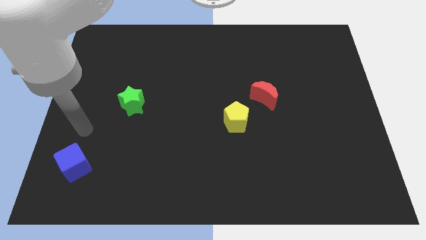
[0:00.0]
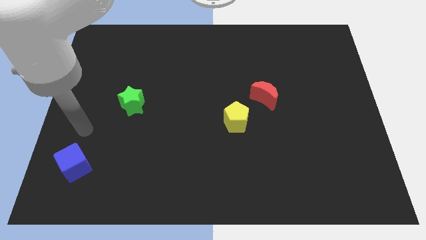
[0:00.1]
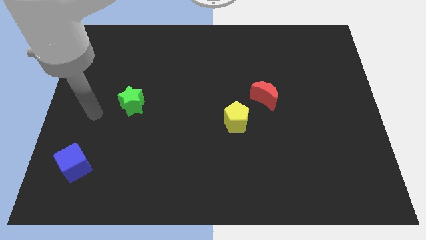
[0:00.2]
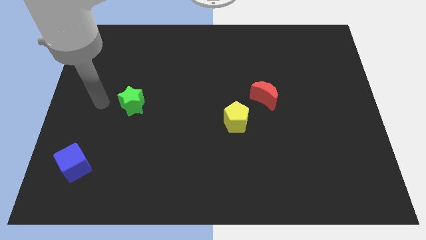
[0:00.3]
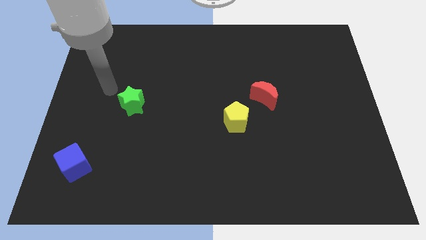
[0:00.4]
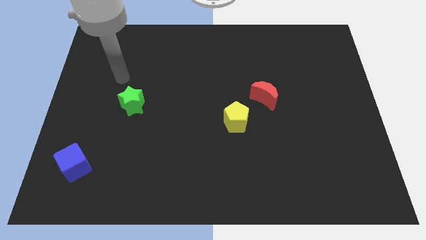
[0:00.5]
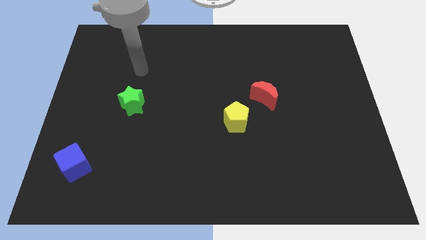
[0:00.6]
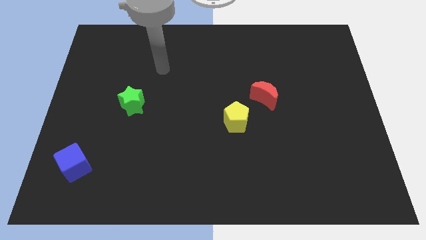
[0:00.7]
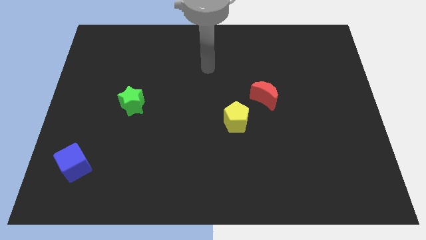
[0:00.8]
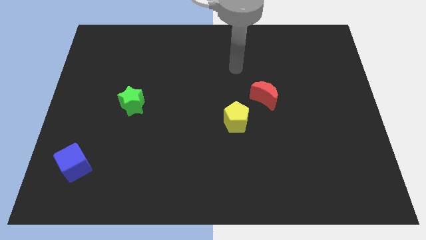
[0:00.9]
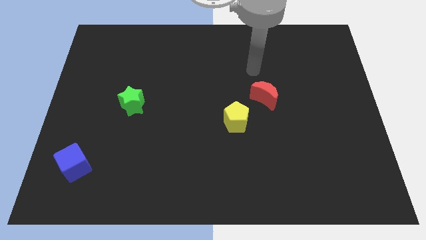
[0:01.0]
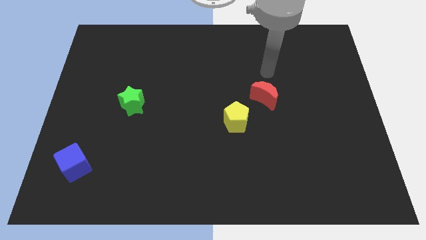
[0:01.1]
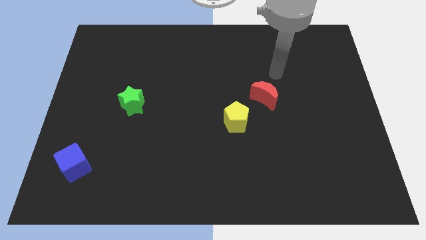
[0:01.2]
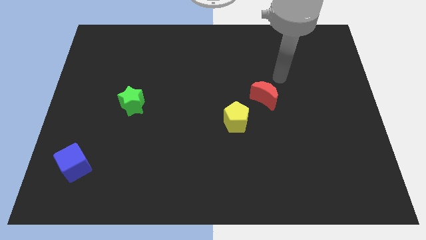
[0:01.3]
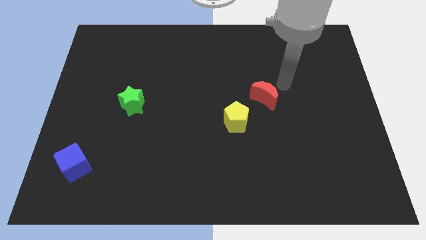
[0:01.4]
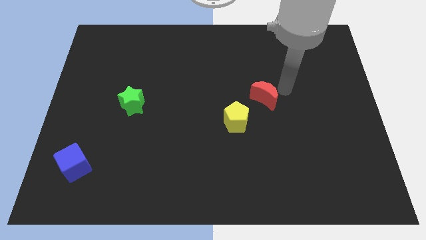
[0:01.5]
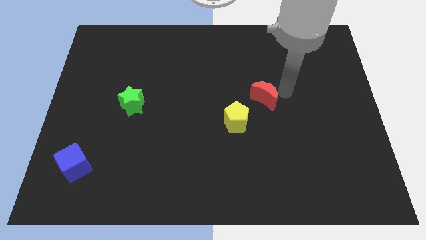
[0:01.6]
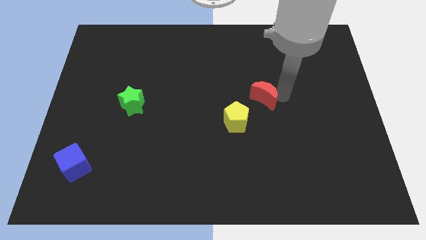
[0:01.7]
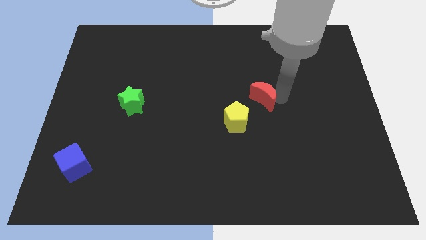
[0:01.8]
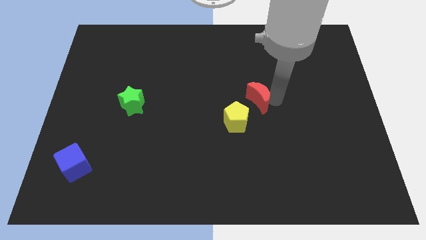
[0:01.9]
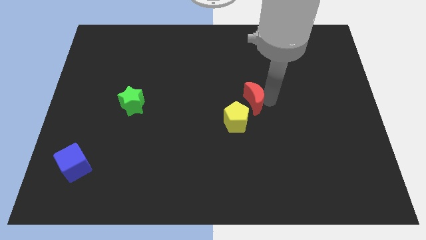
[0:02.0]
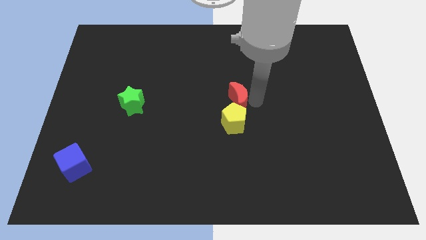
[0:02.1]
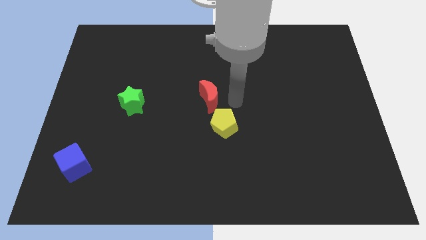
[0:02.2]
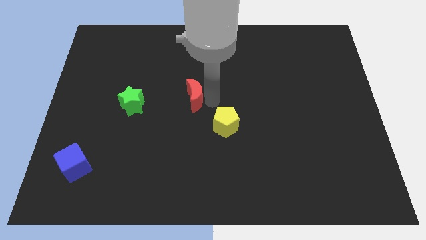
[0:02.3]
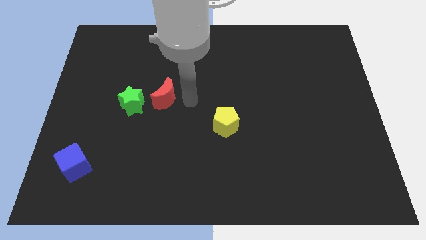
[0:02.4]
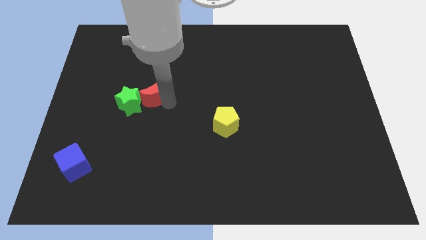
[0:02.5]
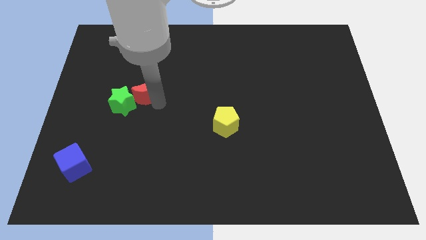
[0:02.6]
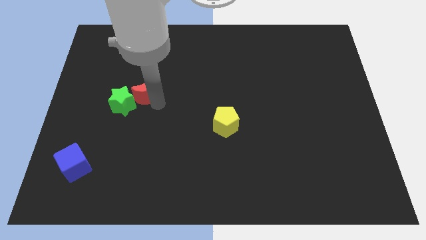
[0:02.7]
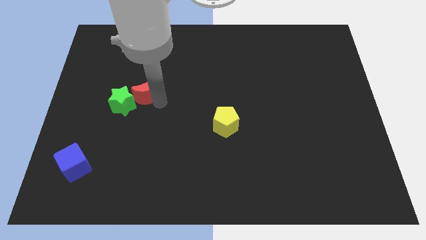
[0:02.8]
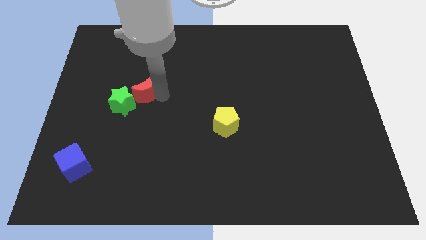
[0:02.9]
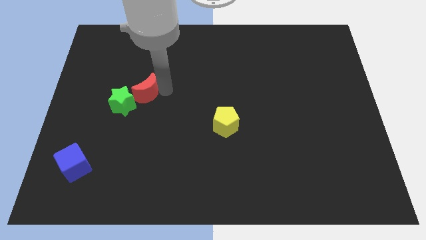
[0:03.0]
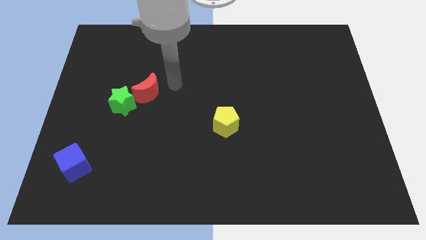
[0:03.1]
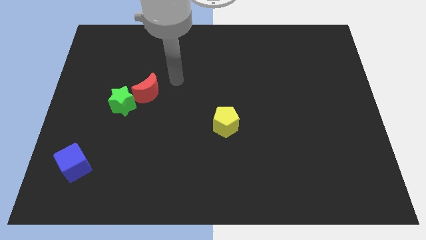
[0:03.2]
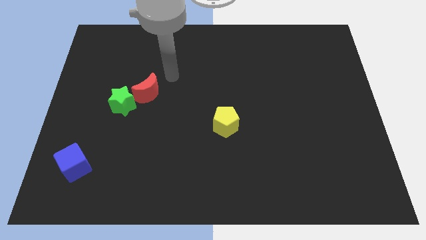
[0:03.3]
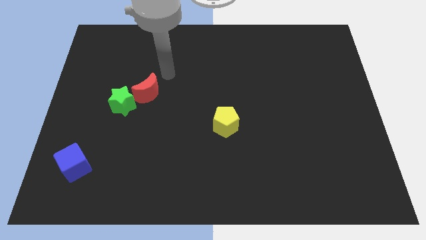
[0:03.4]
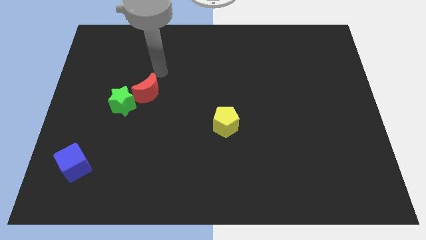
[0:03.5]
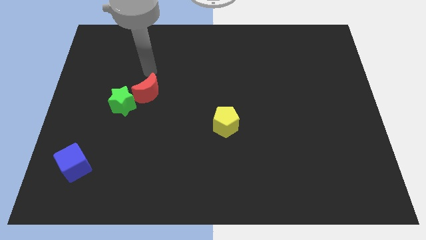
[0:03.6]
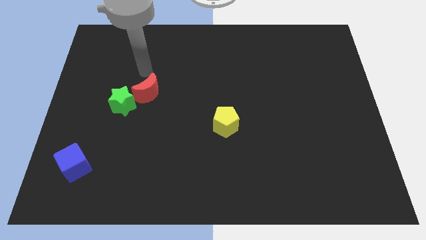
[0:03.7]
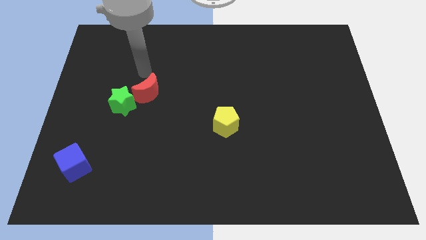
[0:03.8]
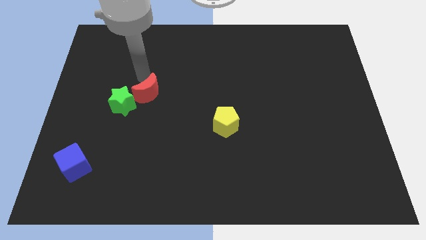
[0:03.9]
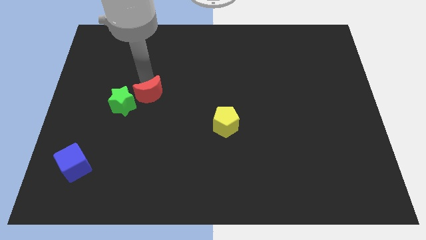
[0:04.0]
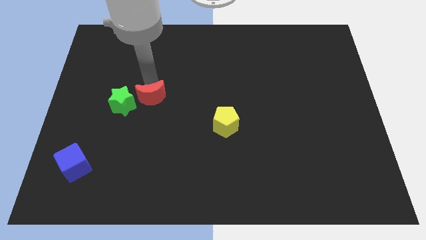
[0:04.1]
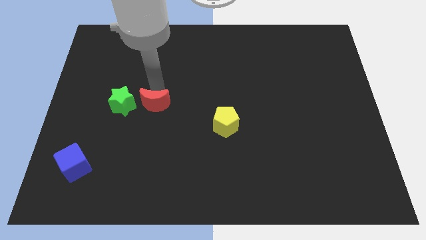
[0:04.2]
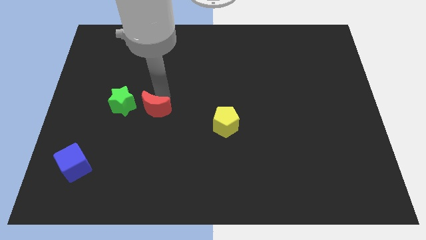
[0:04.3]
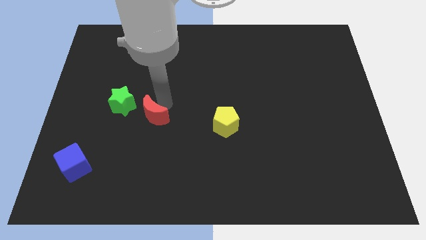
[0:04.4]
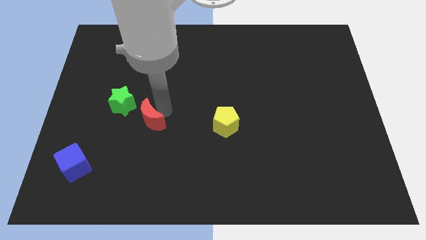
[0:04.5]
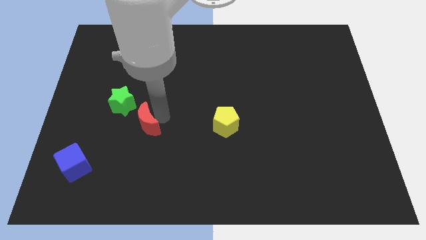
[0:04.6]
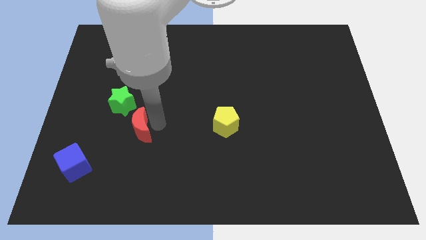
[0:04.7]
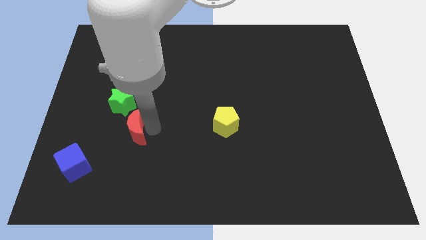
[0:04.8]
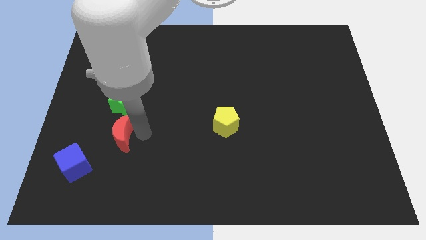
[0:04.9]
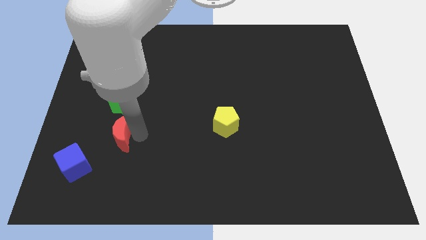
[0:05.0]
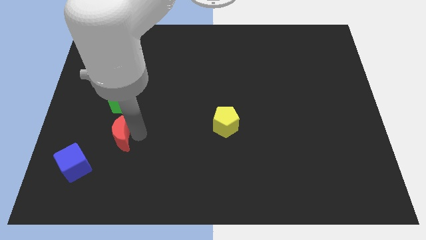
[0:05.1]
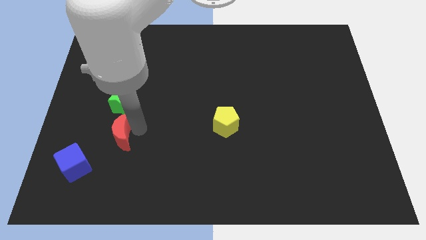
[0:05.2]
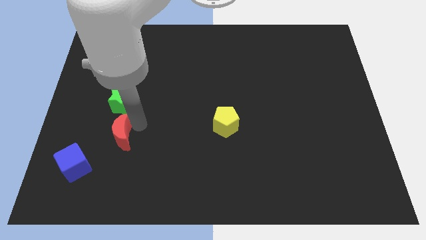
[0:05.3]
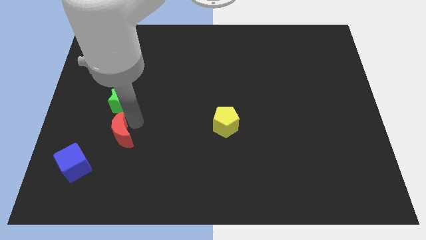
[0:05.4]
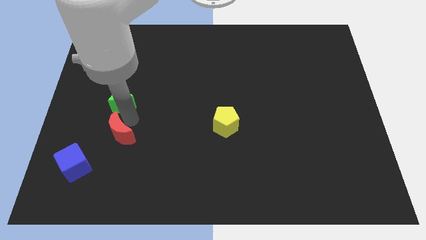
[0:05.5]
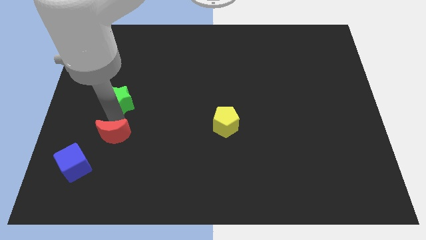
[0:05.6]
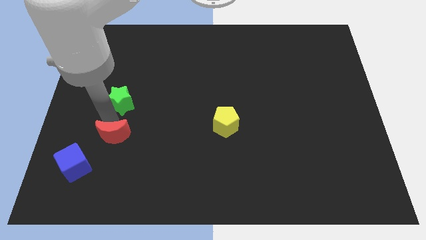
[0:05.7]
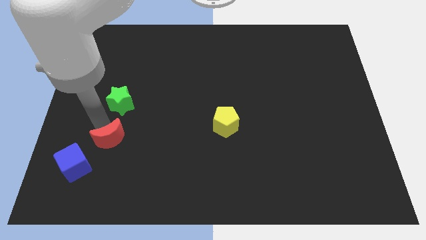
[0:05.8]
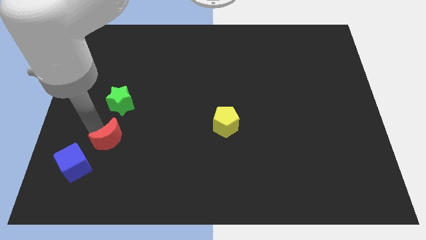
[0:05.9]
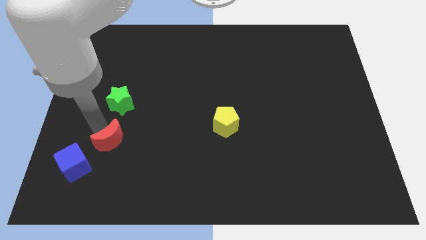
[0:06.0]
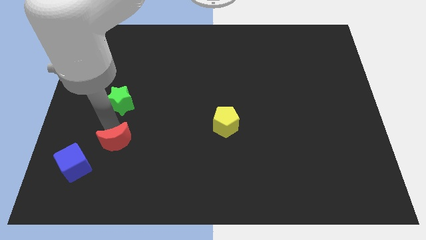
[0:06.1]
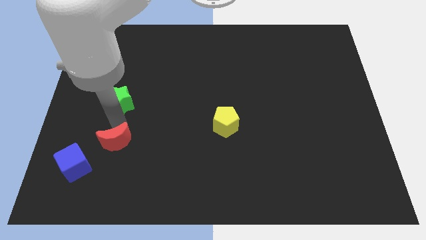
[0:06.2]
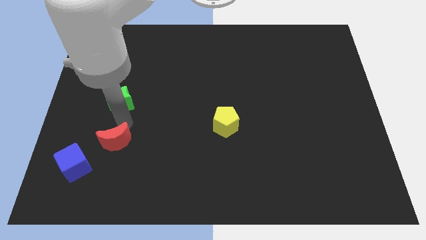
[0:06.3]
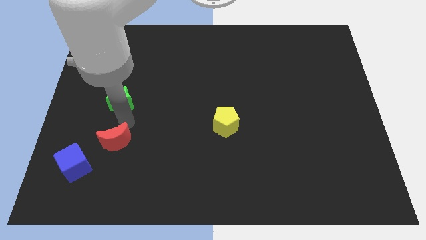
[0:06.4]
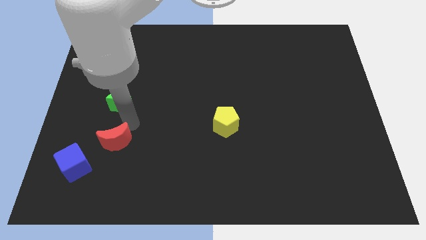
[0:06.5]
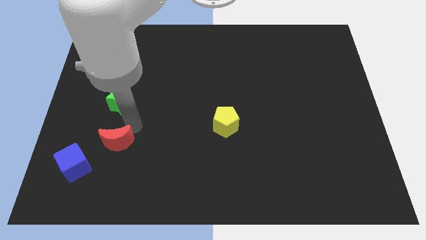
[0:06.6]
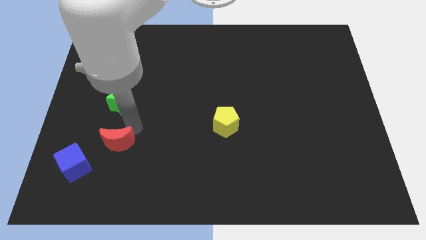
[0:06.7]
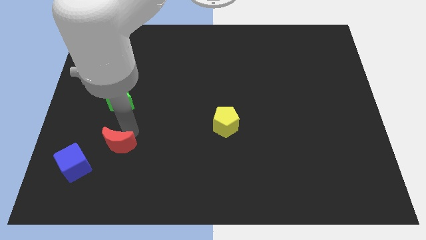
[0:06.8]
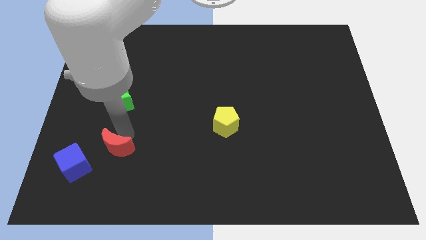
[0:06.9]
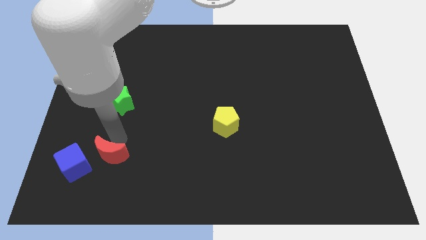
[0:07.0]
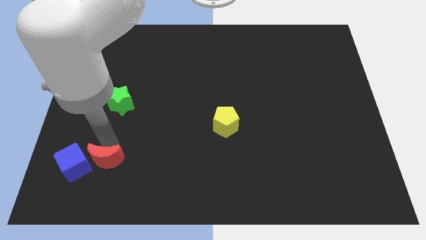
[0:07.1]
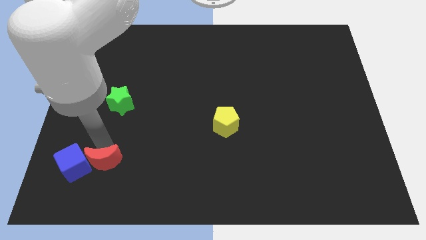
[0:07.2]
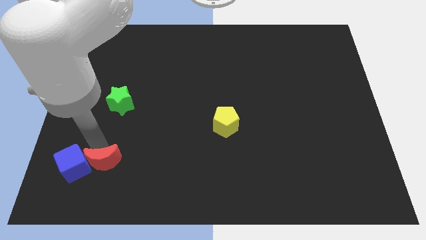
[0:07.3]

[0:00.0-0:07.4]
slide the moon to the blue block

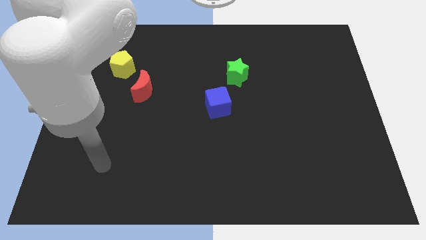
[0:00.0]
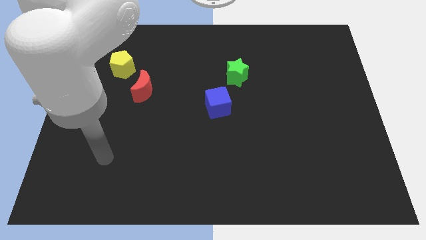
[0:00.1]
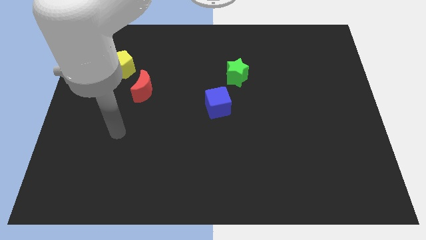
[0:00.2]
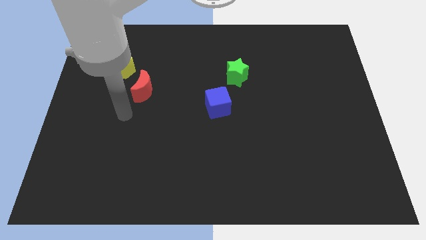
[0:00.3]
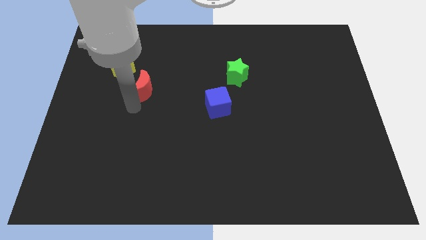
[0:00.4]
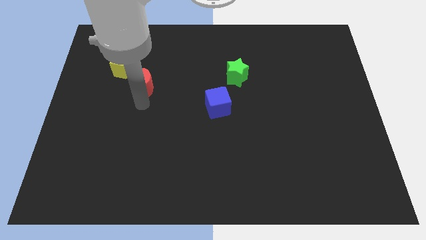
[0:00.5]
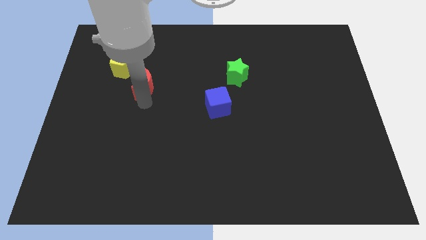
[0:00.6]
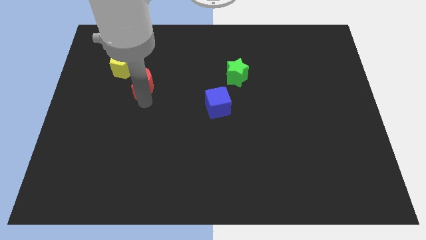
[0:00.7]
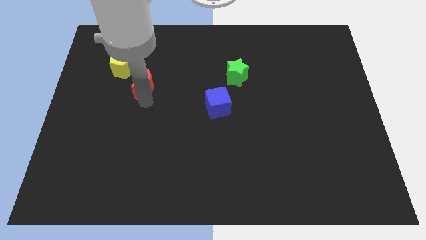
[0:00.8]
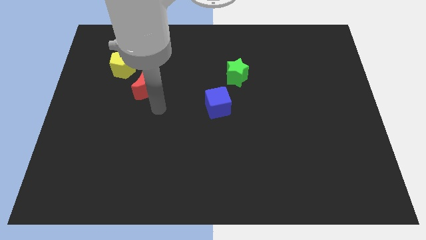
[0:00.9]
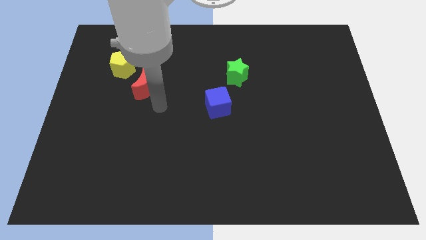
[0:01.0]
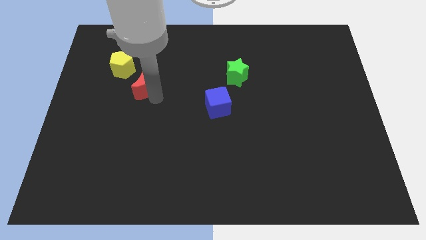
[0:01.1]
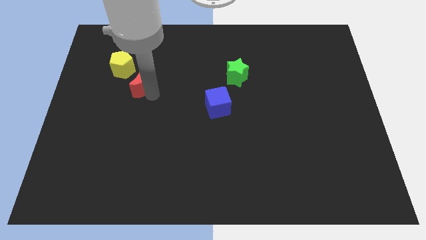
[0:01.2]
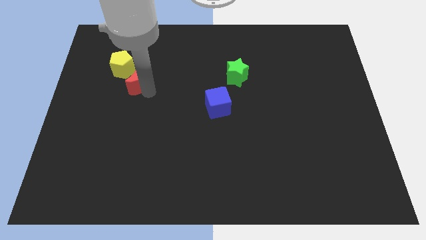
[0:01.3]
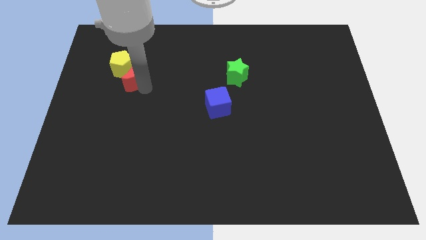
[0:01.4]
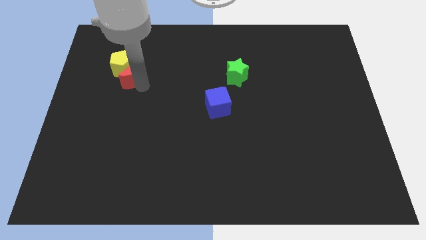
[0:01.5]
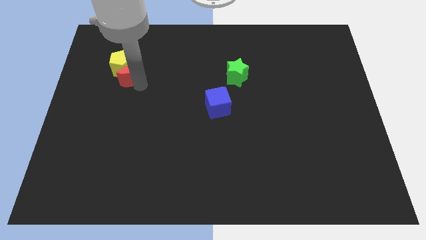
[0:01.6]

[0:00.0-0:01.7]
put the moon next to the yellow block
